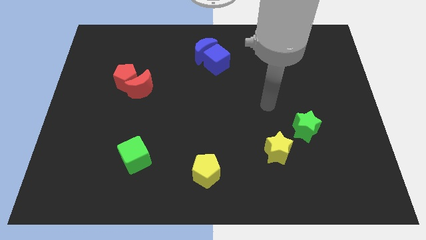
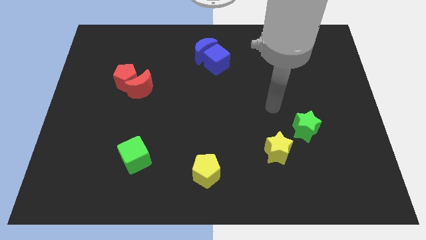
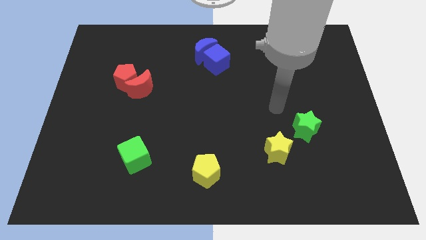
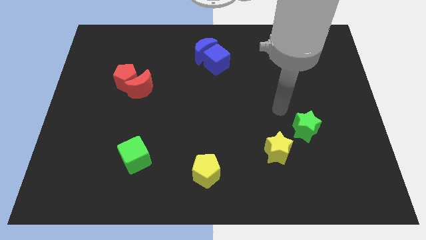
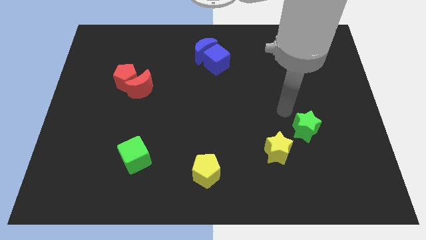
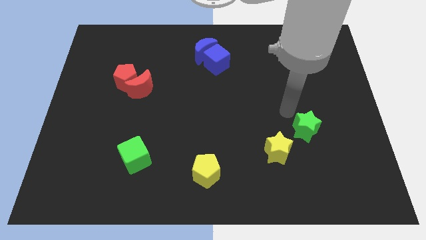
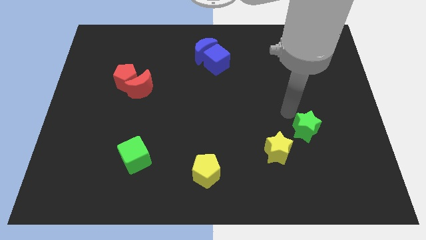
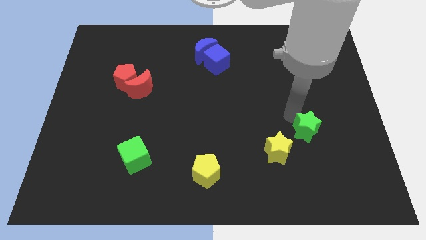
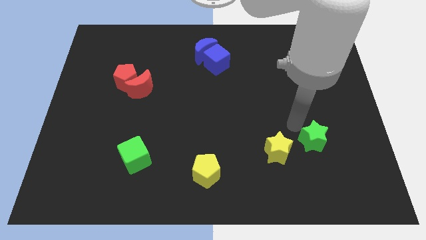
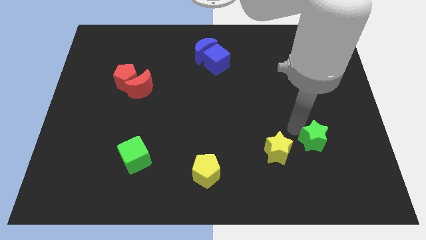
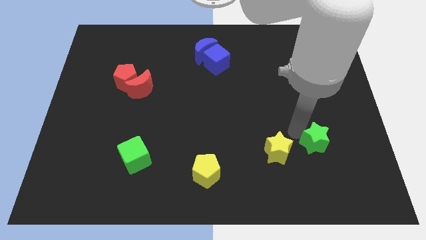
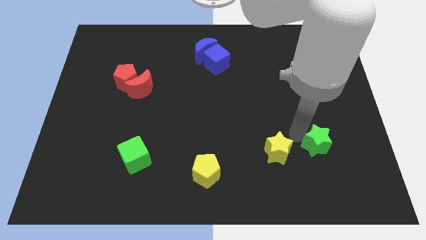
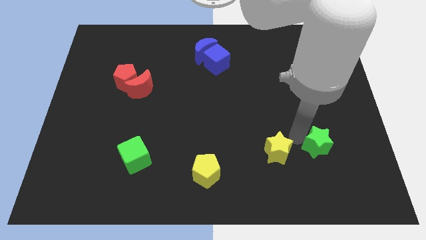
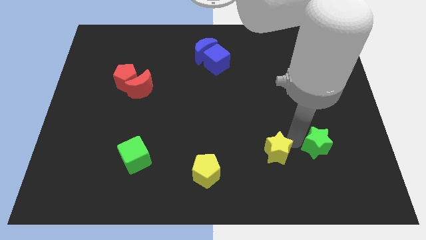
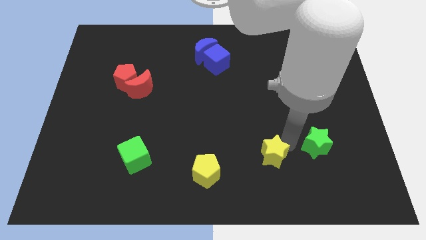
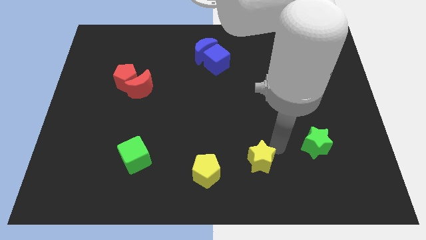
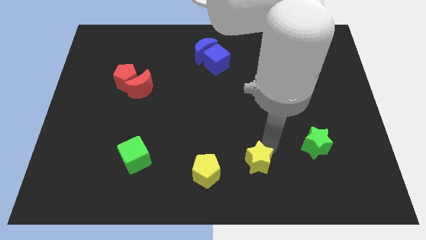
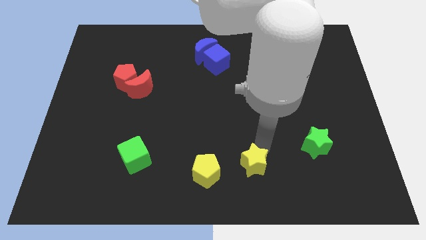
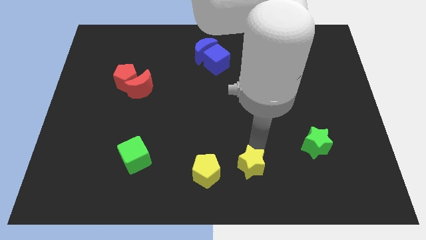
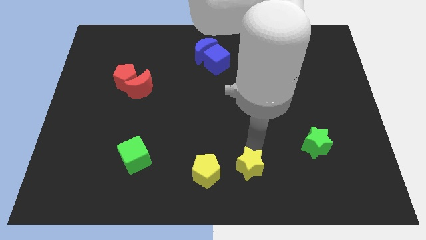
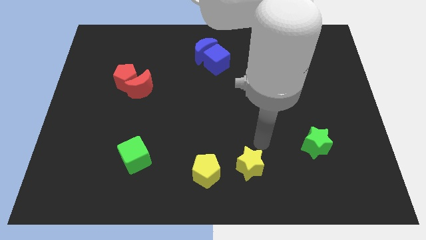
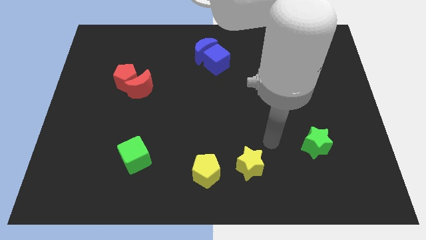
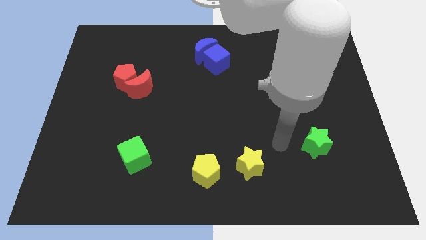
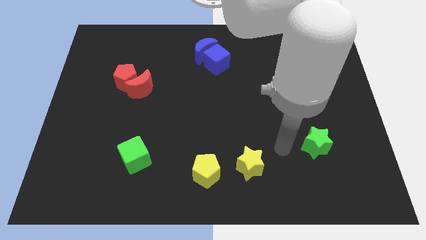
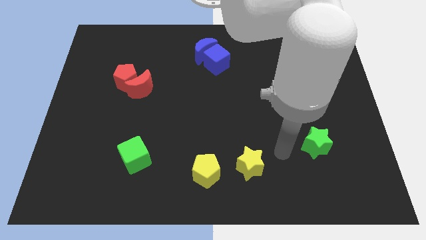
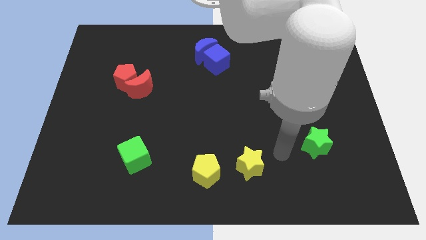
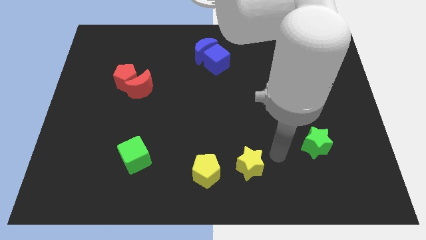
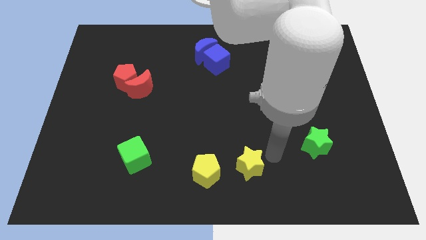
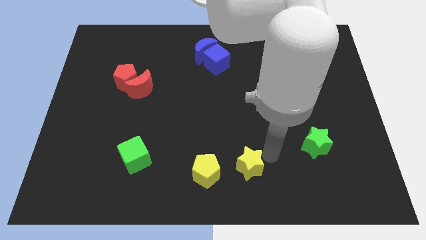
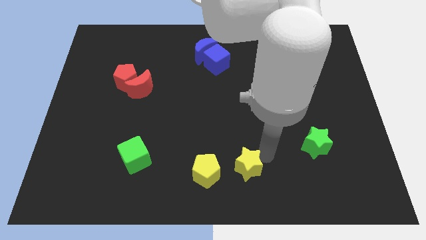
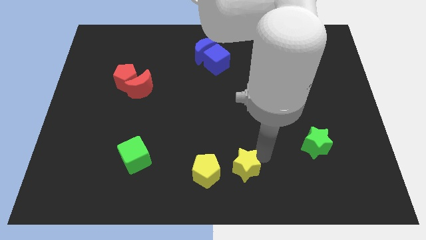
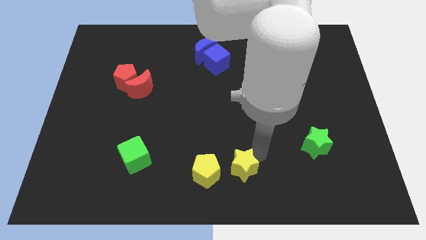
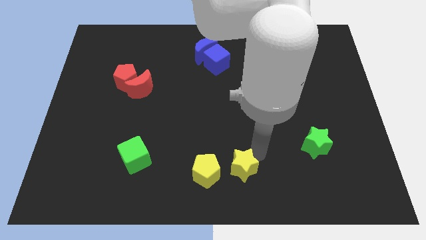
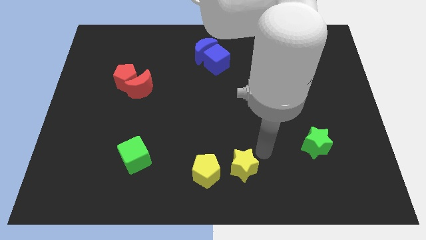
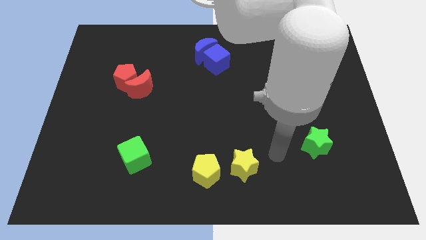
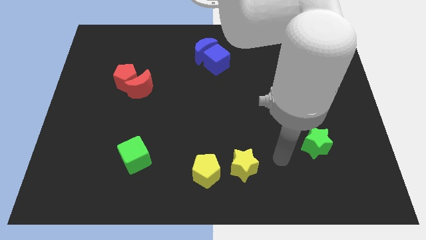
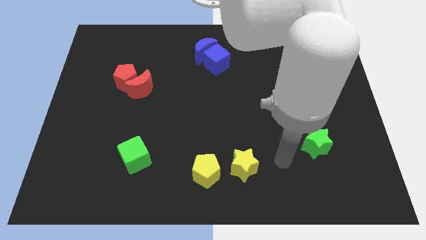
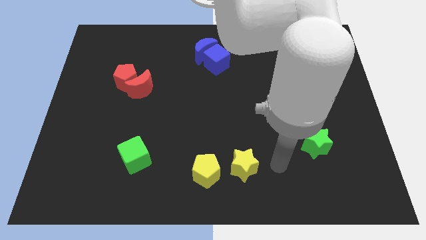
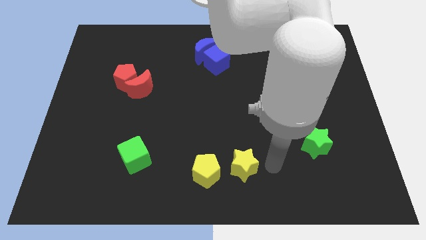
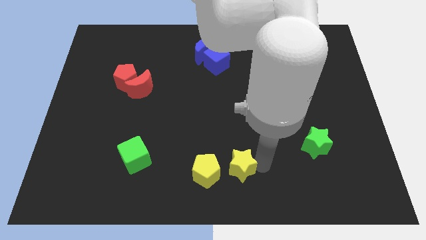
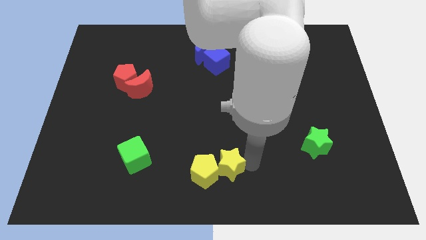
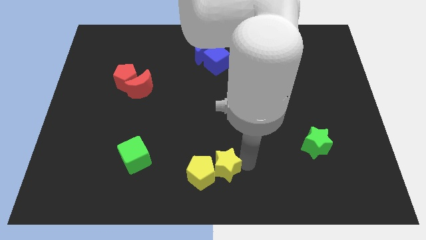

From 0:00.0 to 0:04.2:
place the yellow star to the right of the yellow pentagon

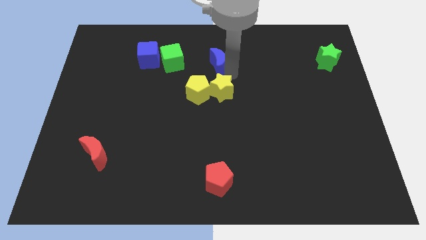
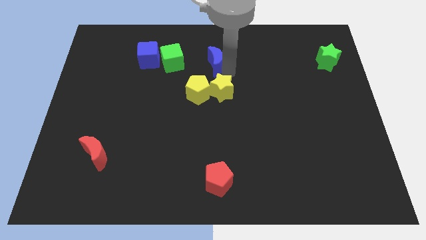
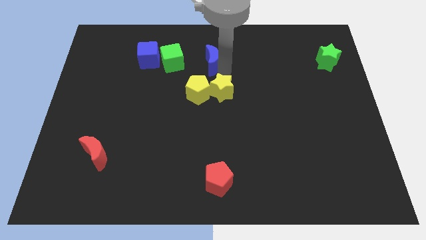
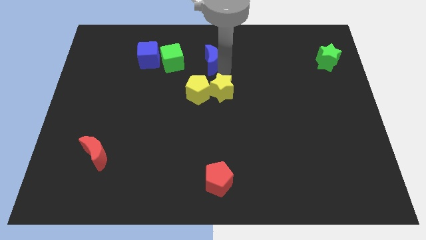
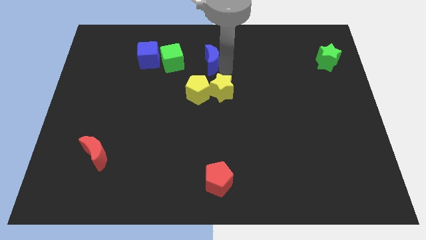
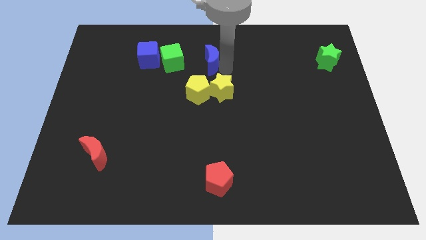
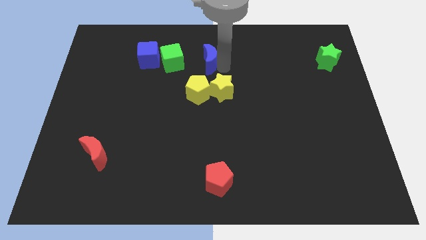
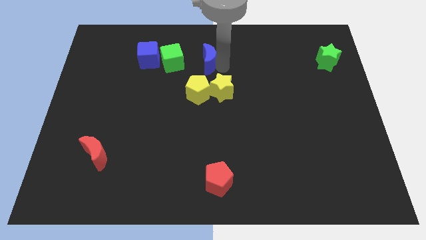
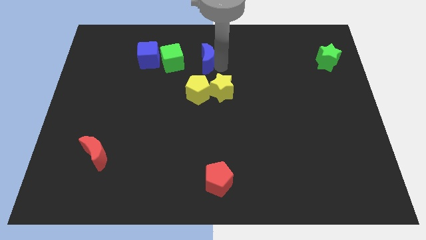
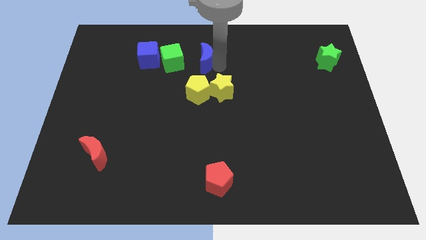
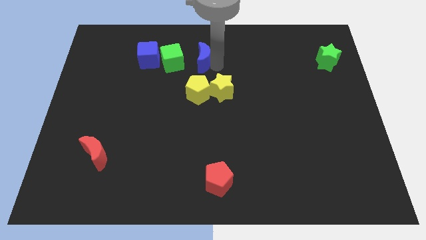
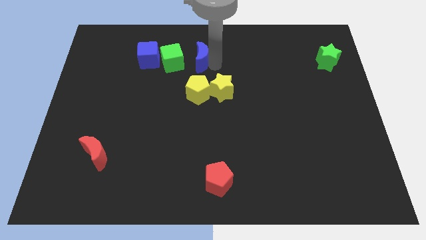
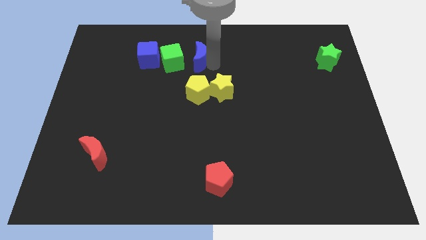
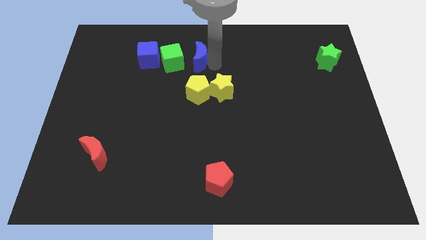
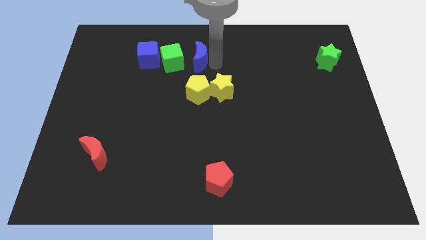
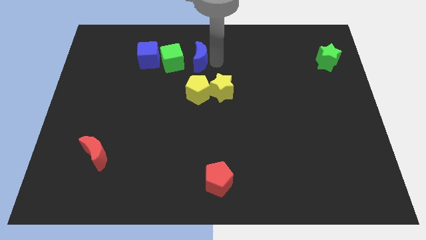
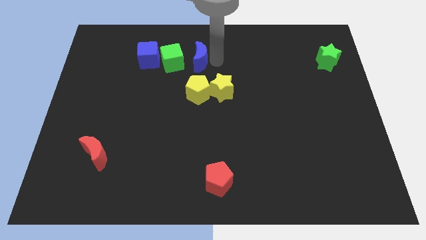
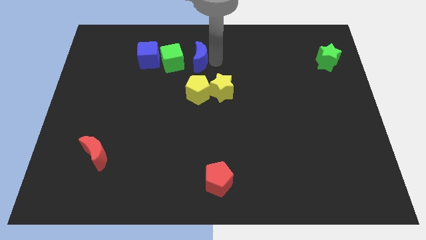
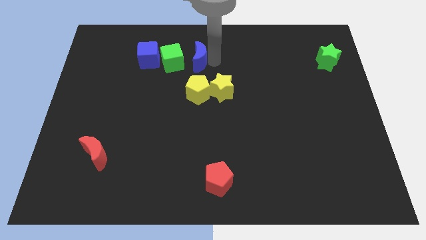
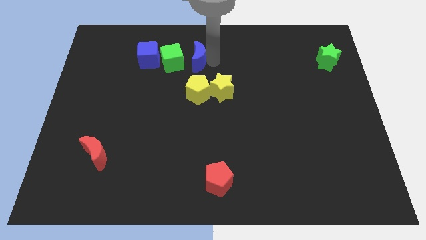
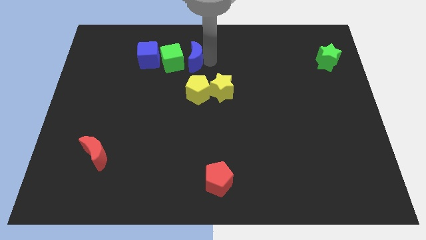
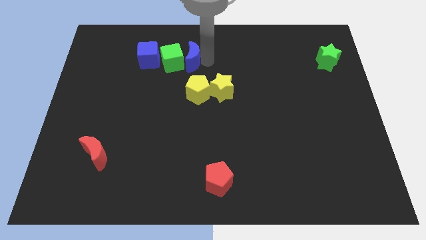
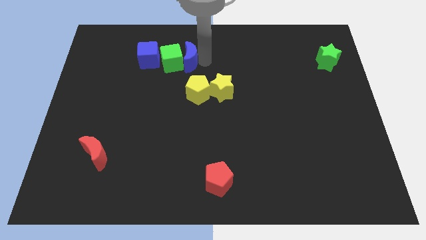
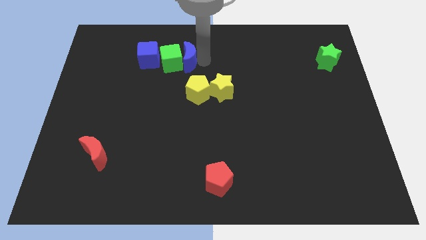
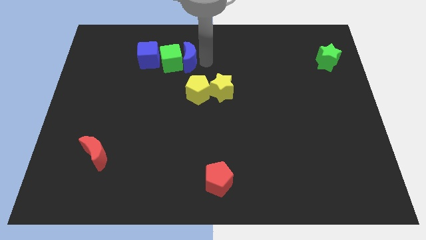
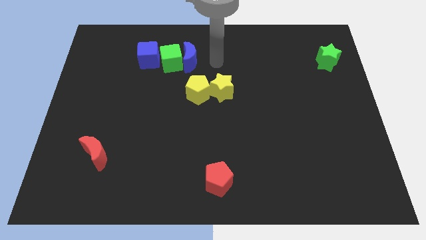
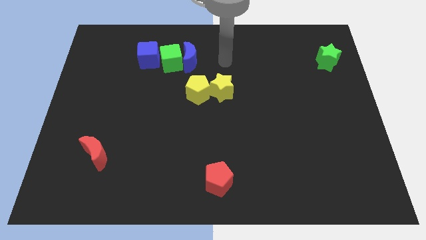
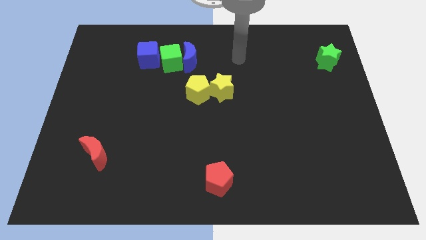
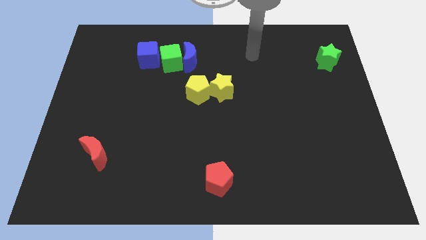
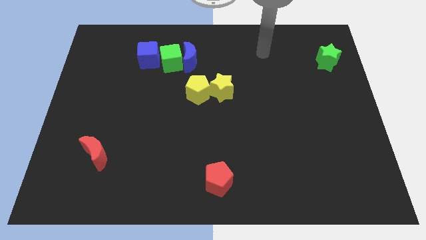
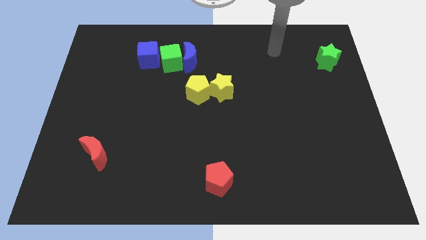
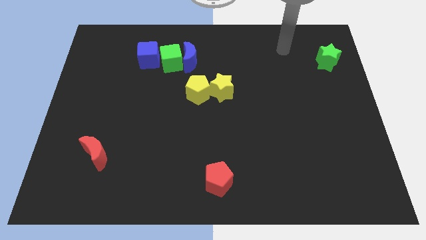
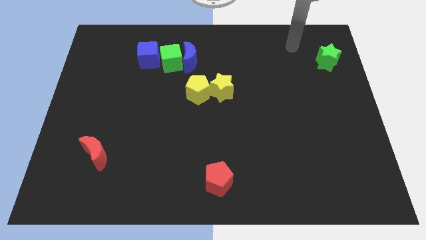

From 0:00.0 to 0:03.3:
move the blue moon right to the green cube

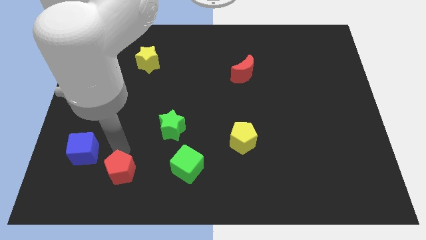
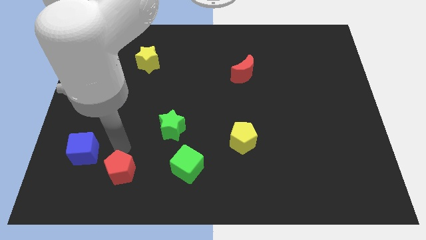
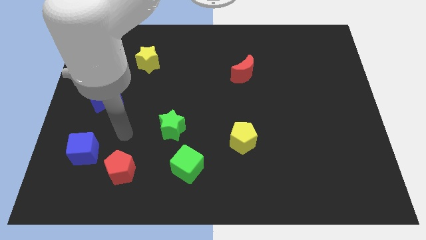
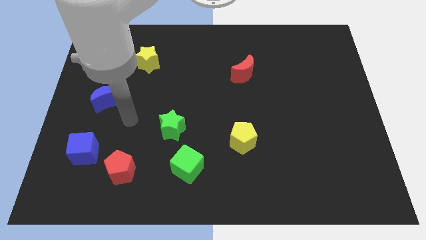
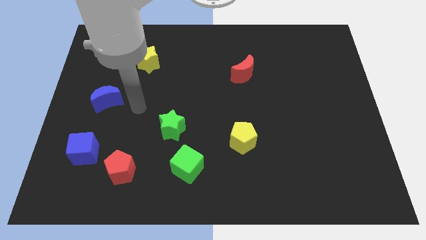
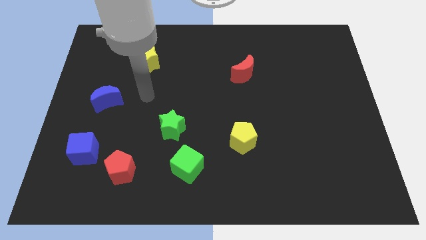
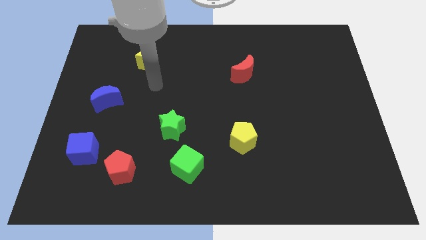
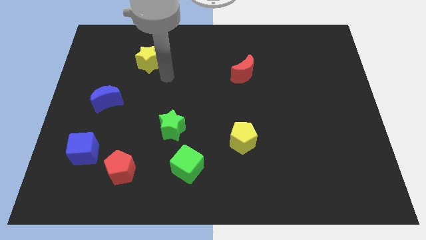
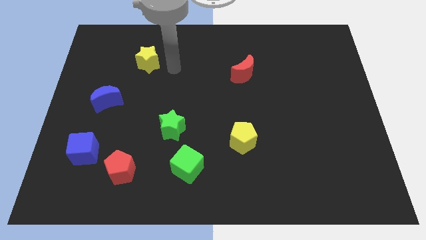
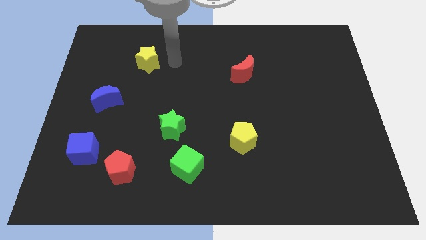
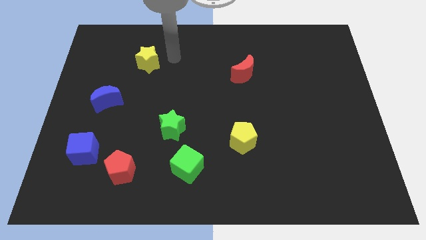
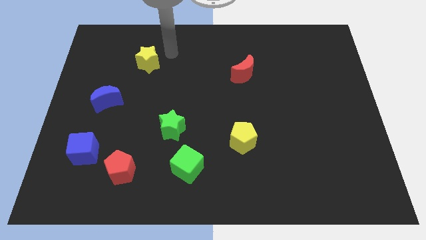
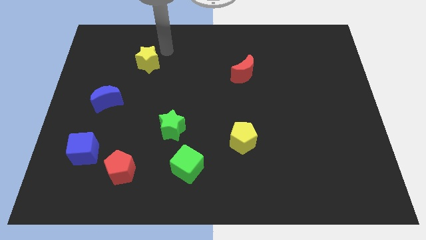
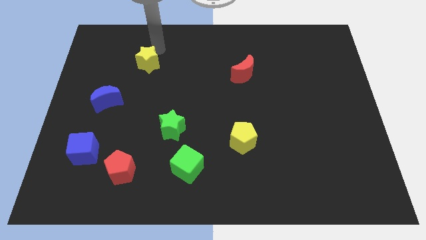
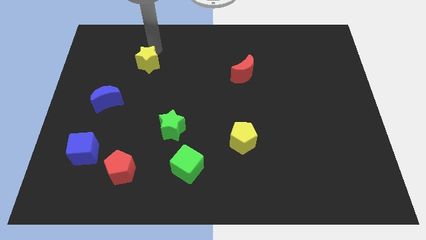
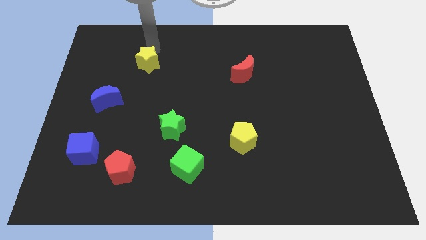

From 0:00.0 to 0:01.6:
move arm near yellow star
